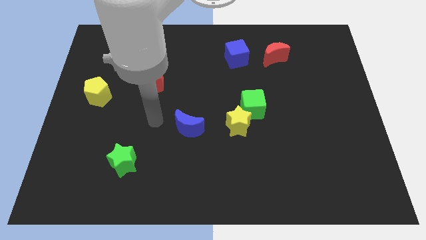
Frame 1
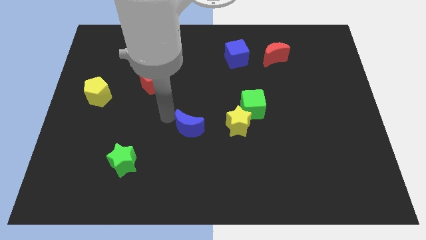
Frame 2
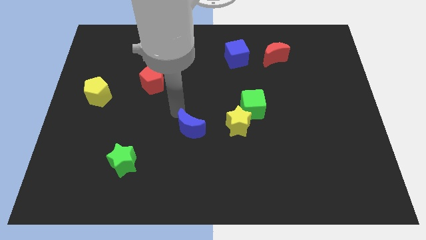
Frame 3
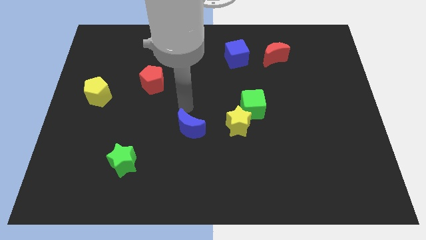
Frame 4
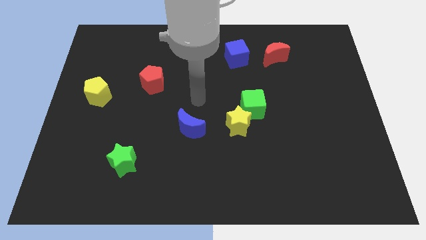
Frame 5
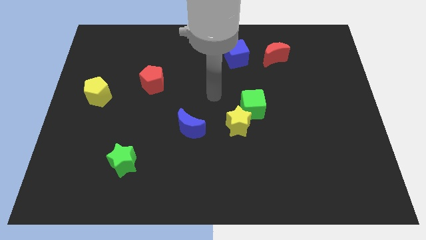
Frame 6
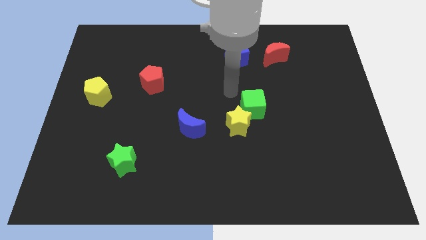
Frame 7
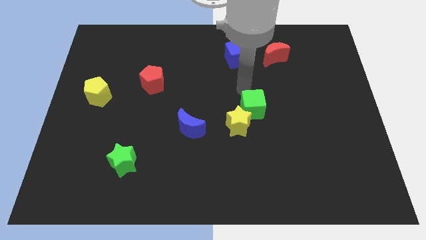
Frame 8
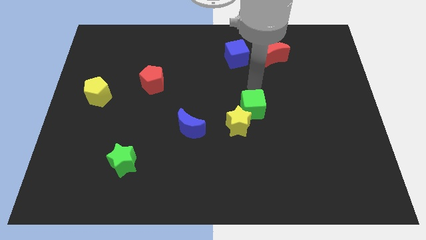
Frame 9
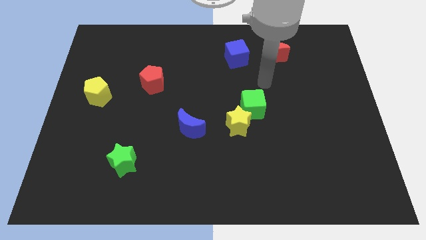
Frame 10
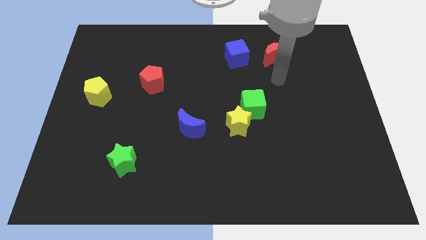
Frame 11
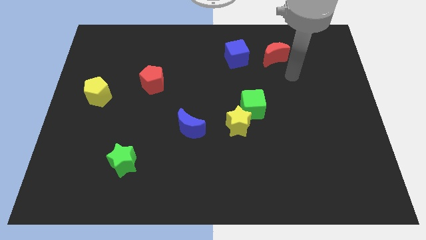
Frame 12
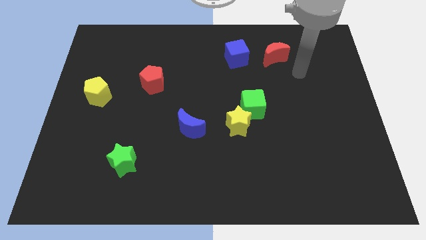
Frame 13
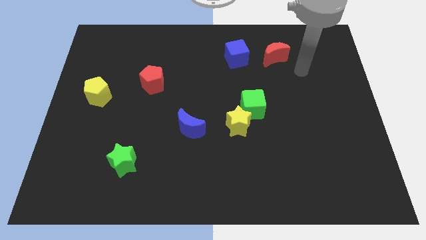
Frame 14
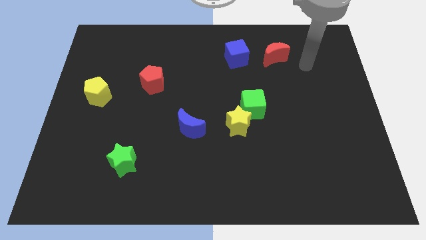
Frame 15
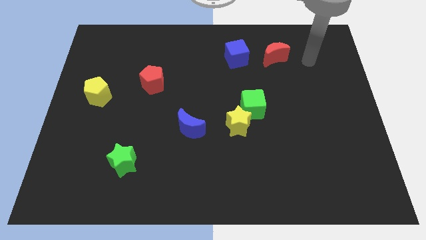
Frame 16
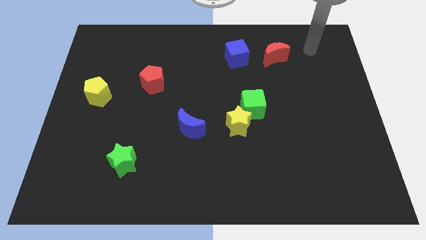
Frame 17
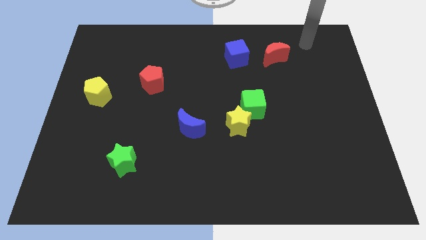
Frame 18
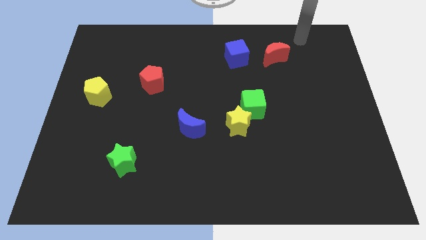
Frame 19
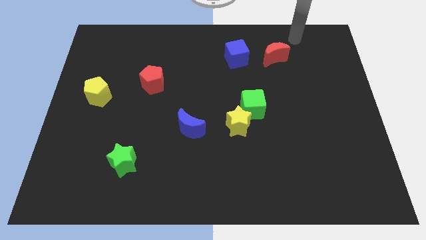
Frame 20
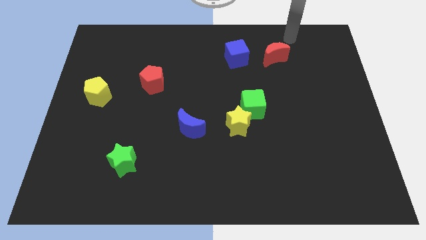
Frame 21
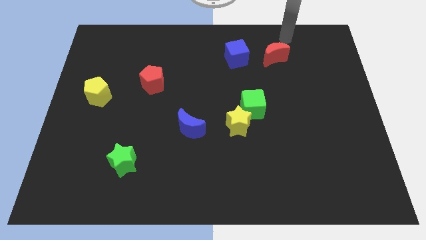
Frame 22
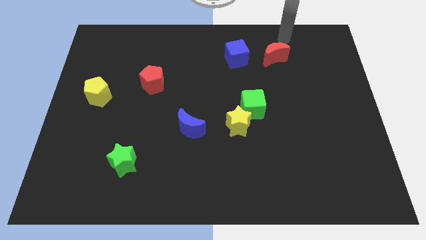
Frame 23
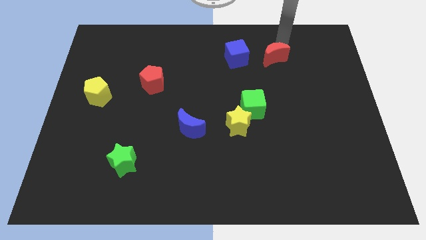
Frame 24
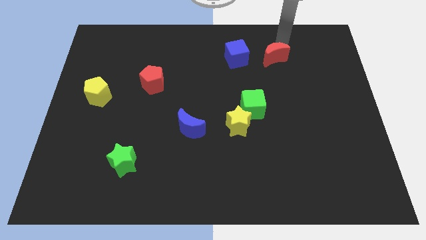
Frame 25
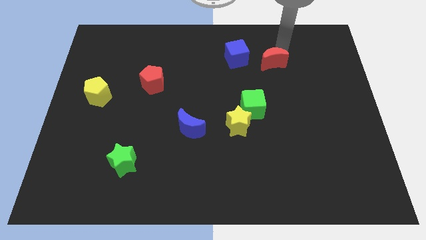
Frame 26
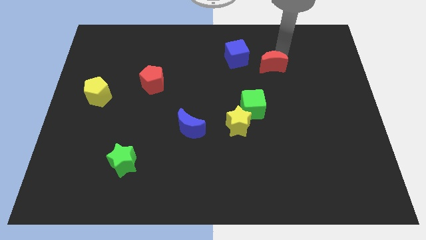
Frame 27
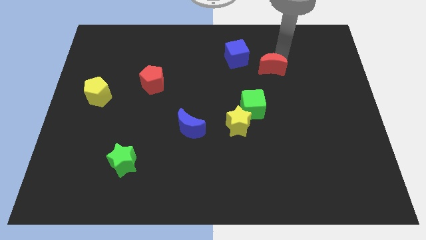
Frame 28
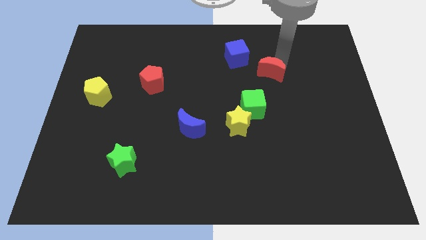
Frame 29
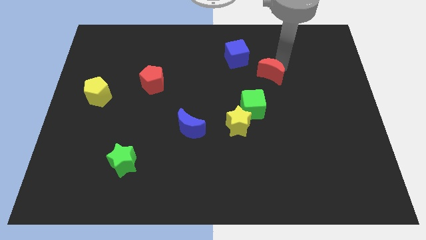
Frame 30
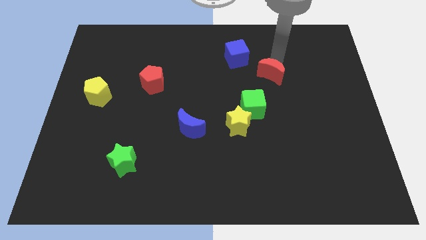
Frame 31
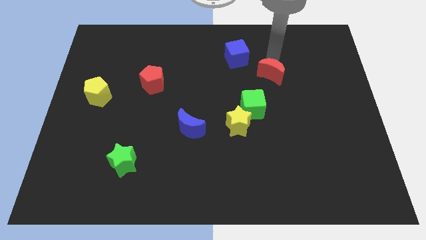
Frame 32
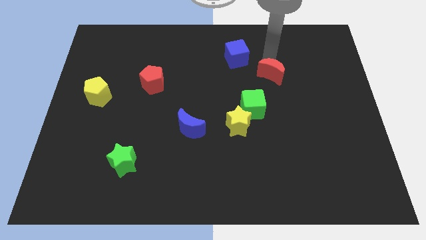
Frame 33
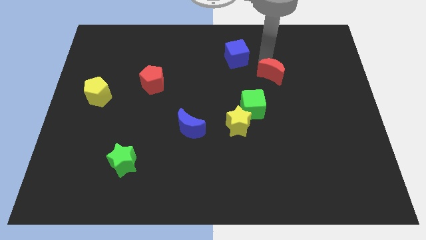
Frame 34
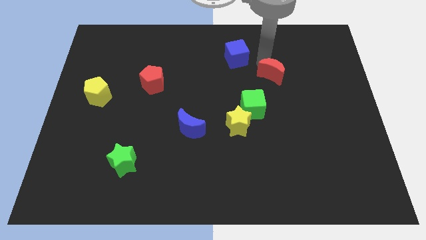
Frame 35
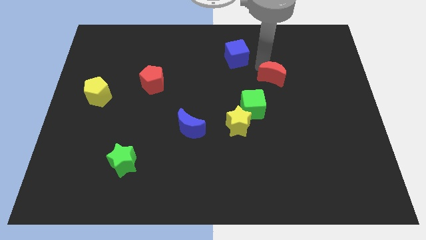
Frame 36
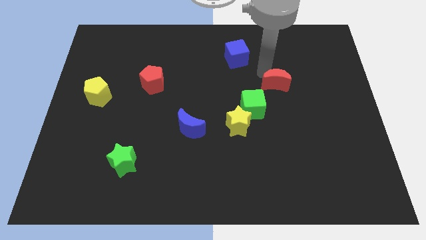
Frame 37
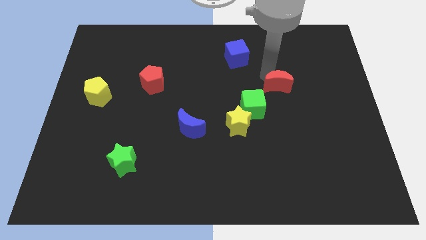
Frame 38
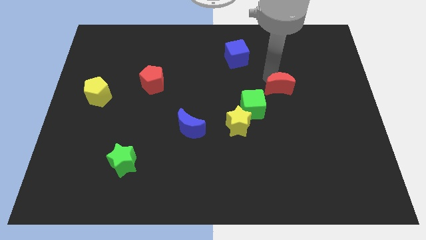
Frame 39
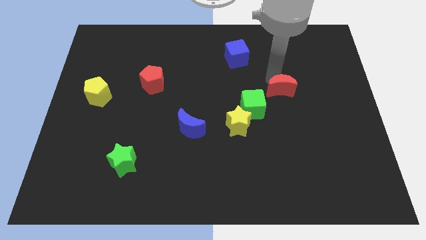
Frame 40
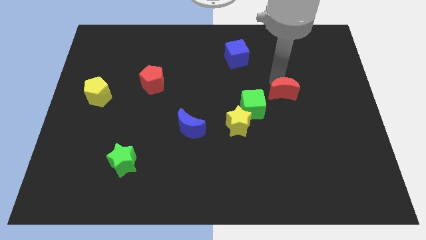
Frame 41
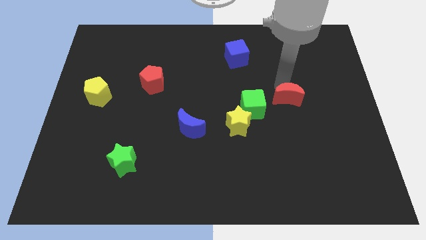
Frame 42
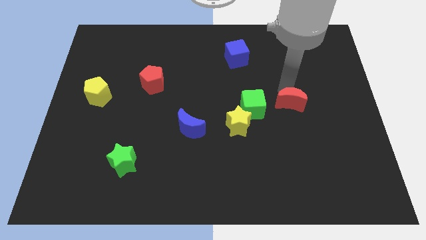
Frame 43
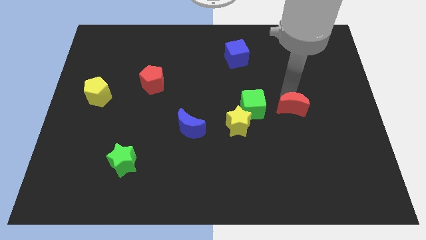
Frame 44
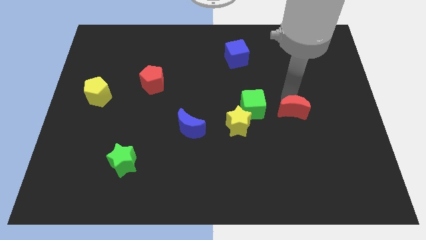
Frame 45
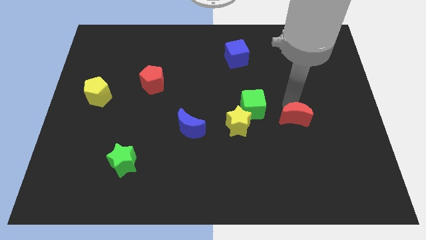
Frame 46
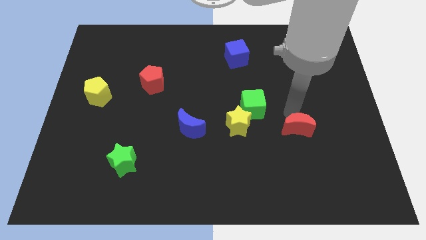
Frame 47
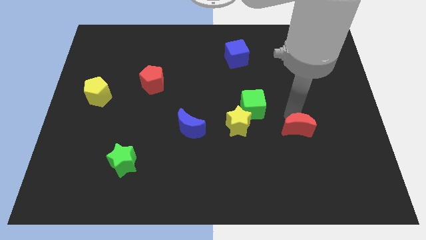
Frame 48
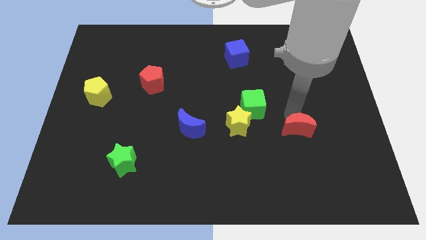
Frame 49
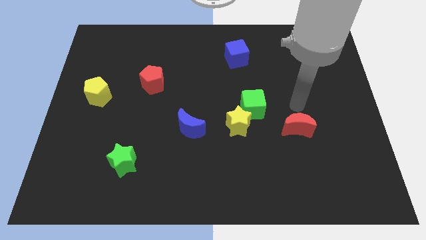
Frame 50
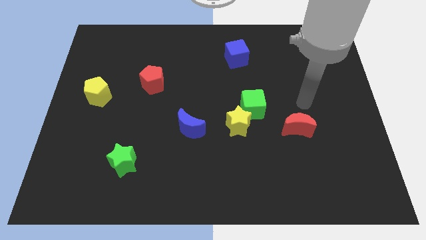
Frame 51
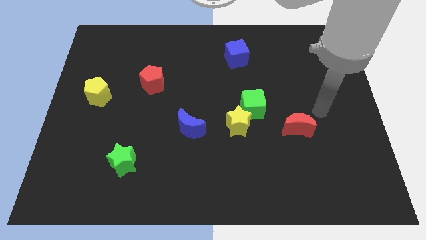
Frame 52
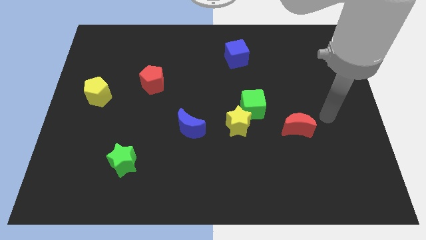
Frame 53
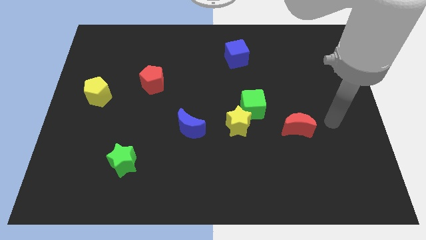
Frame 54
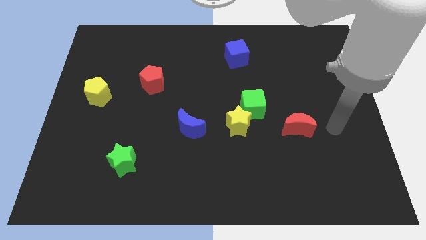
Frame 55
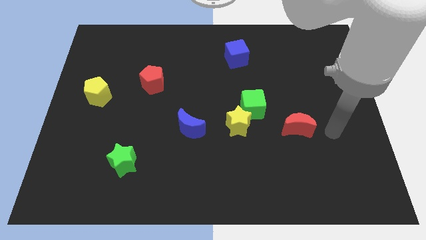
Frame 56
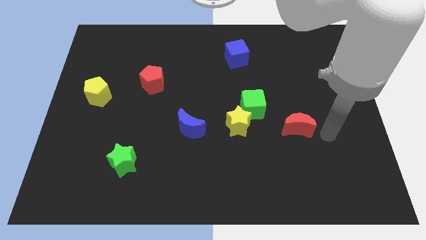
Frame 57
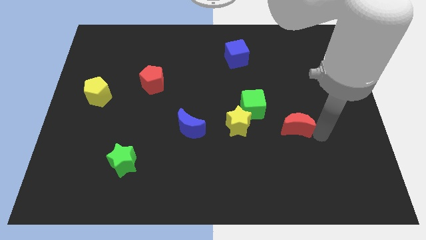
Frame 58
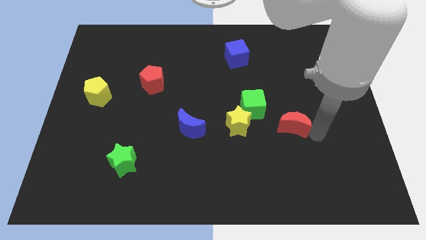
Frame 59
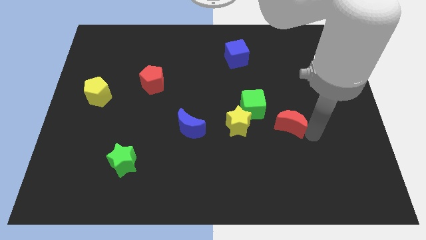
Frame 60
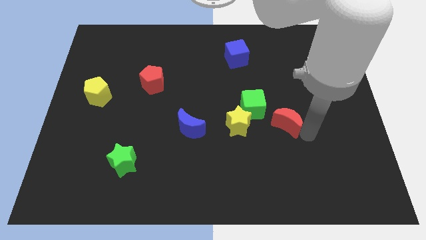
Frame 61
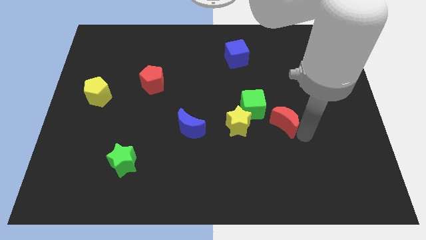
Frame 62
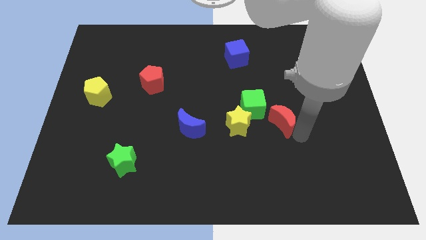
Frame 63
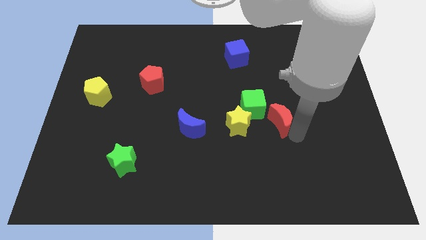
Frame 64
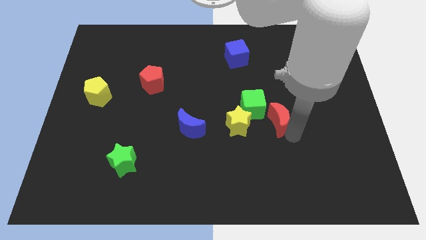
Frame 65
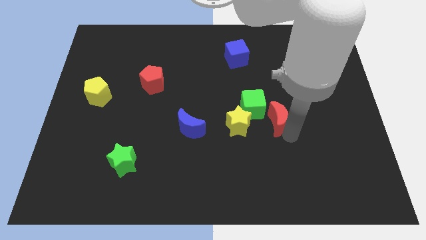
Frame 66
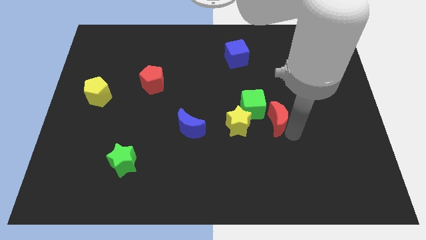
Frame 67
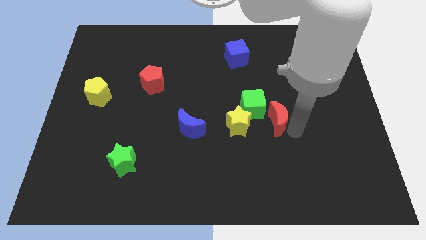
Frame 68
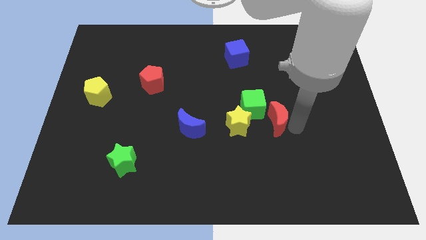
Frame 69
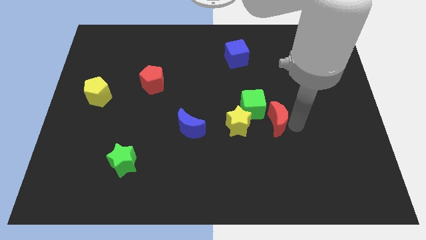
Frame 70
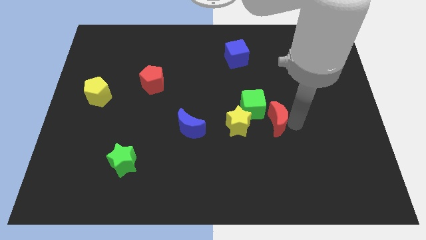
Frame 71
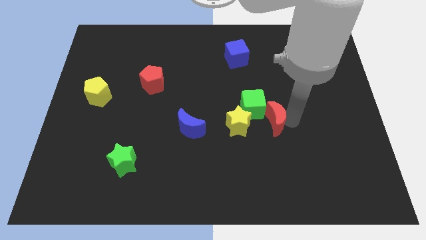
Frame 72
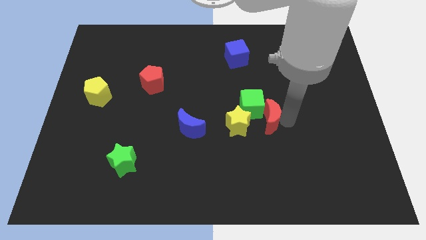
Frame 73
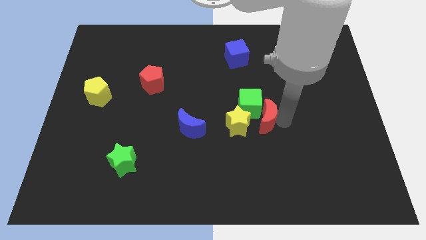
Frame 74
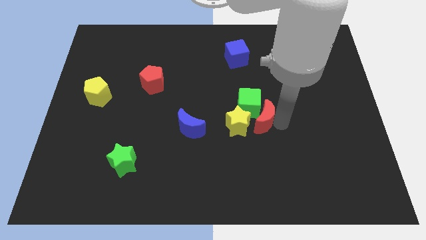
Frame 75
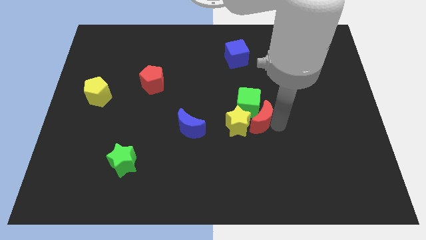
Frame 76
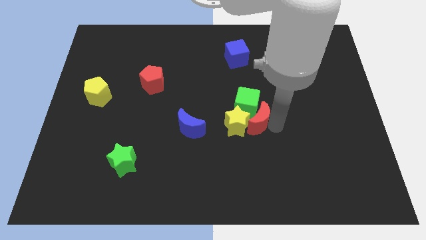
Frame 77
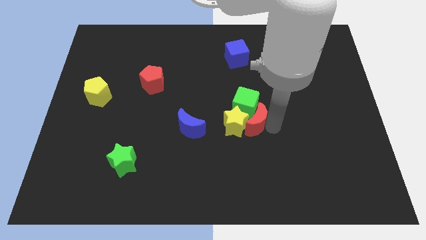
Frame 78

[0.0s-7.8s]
move the red moon close to the yellow star

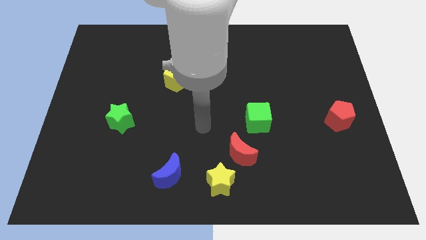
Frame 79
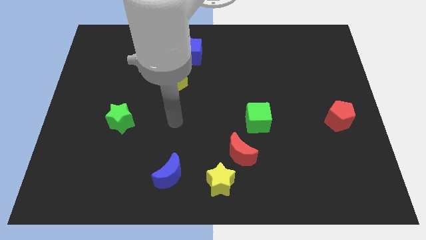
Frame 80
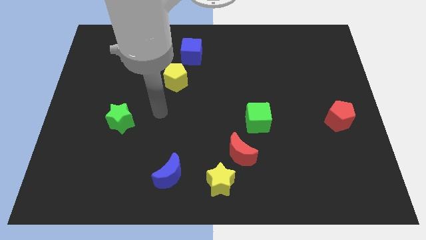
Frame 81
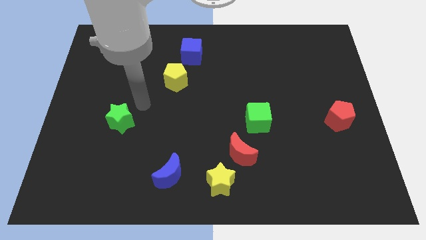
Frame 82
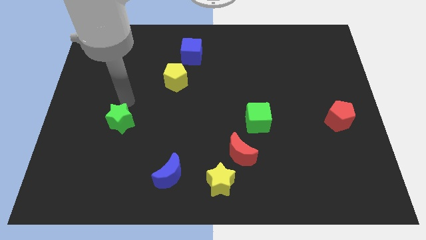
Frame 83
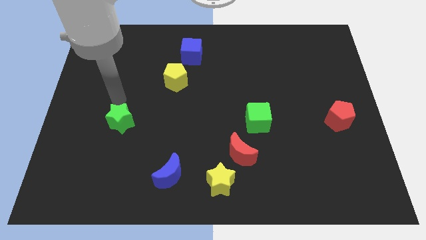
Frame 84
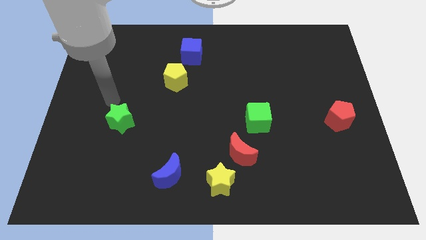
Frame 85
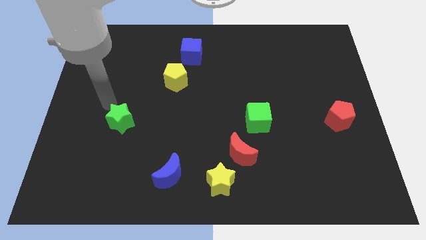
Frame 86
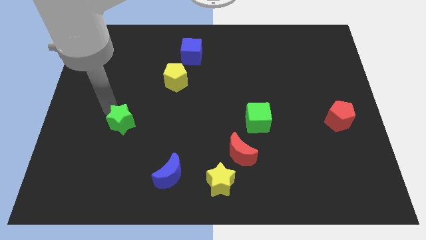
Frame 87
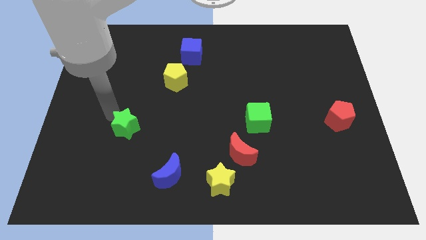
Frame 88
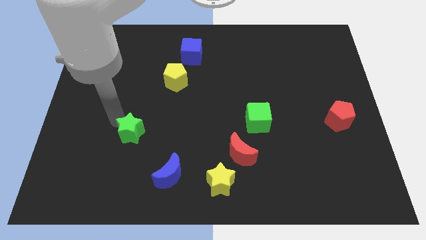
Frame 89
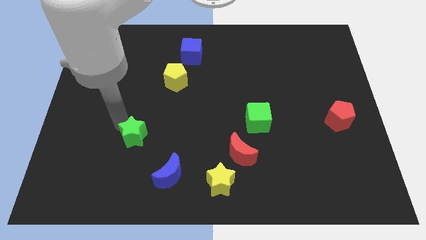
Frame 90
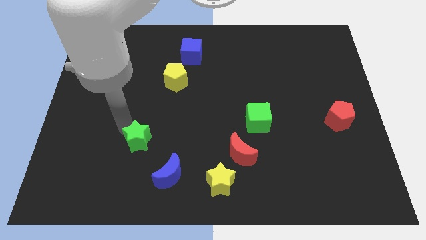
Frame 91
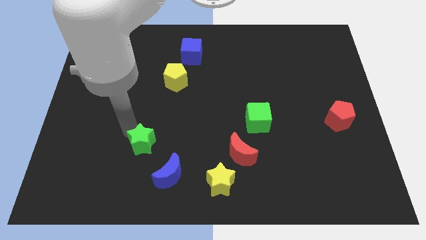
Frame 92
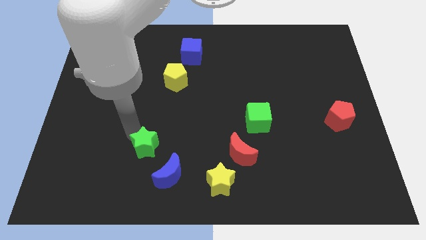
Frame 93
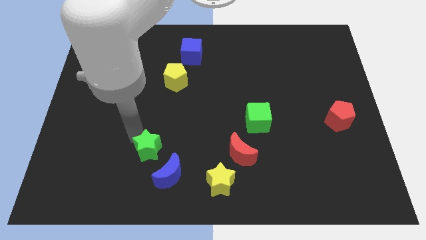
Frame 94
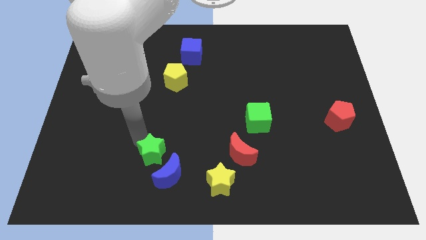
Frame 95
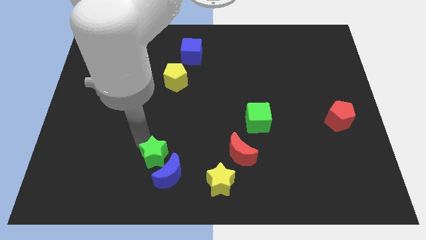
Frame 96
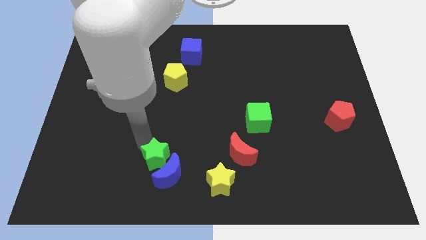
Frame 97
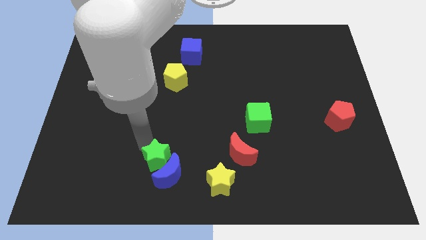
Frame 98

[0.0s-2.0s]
move the green star to the blue moon
